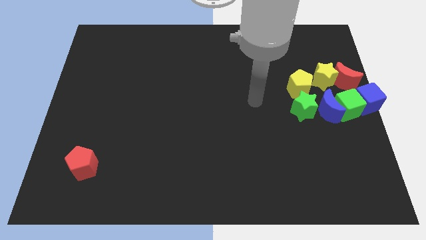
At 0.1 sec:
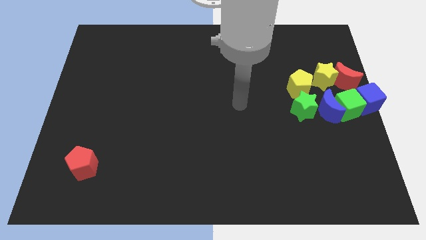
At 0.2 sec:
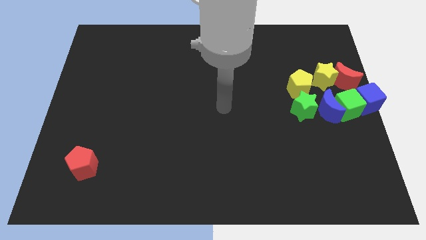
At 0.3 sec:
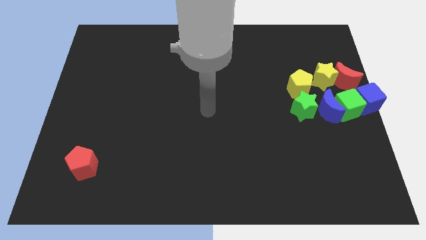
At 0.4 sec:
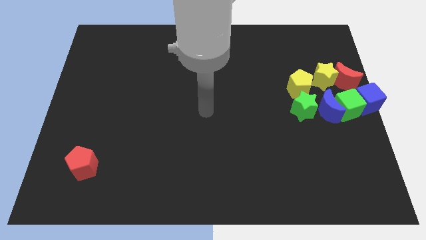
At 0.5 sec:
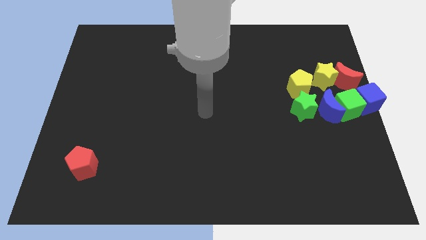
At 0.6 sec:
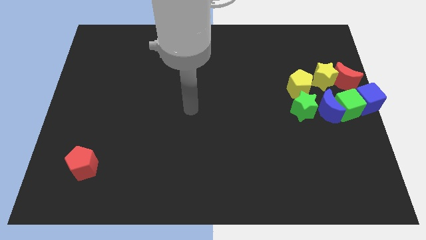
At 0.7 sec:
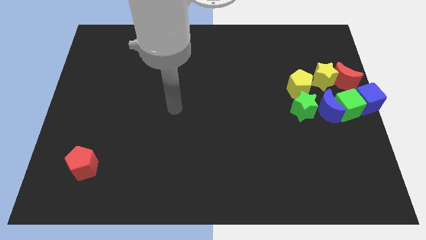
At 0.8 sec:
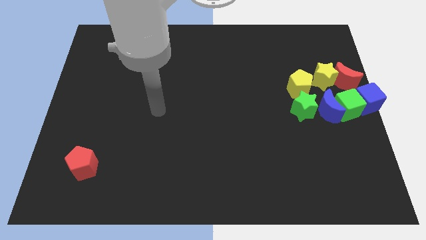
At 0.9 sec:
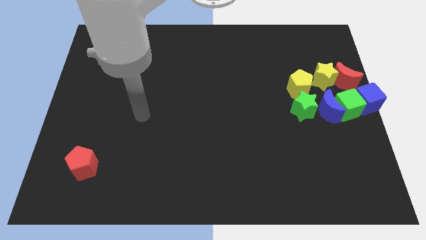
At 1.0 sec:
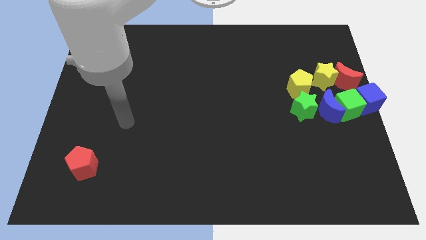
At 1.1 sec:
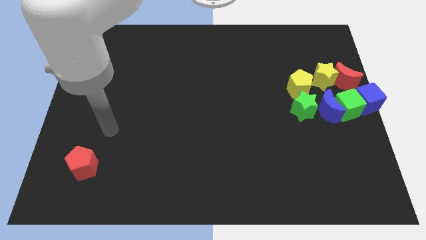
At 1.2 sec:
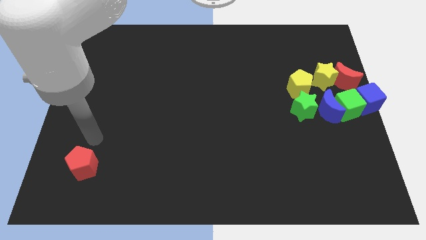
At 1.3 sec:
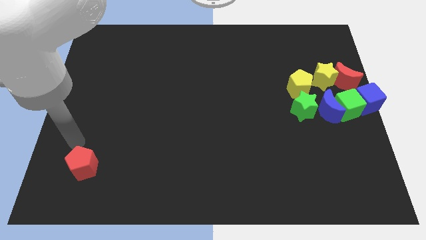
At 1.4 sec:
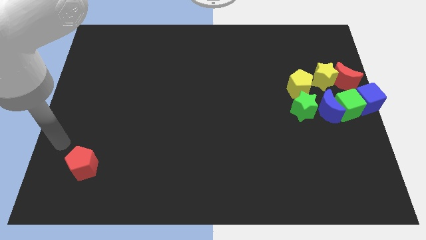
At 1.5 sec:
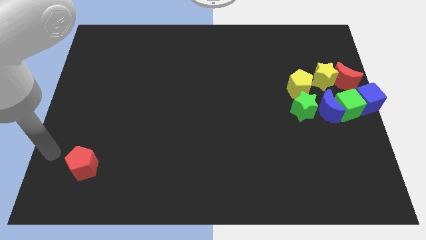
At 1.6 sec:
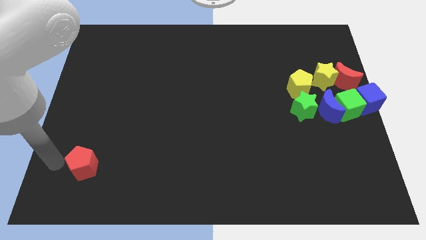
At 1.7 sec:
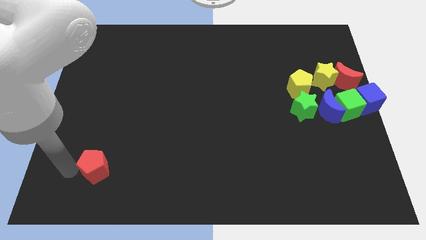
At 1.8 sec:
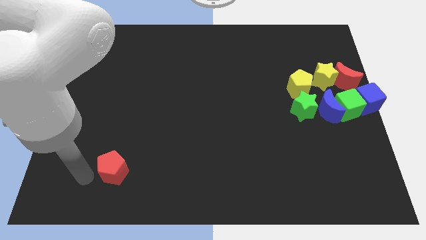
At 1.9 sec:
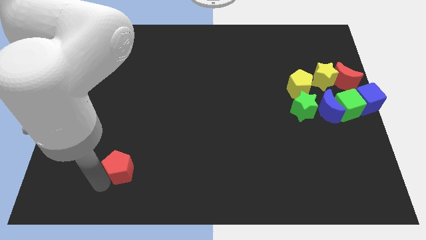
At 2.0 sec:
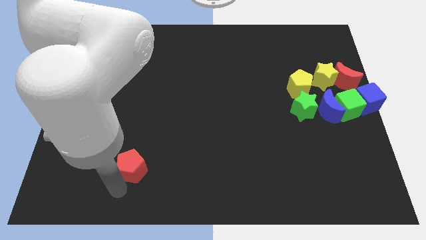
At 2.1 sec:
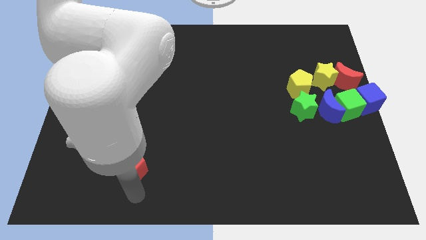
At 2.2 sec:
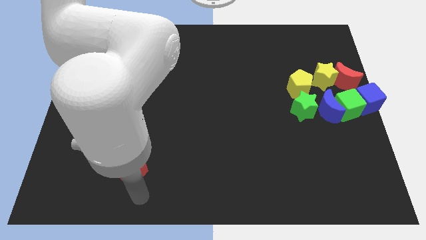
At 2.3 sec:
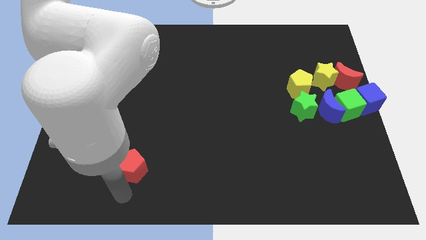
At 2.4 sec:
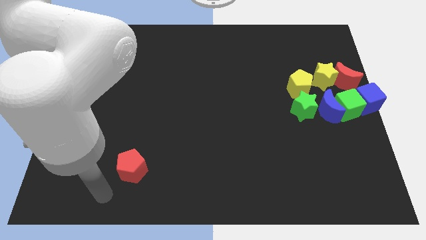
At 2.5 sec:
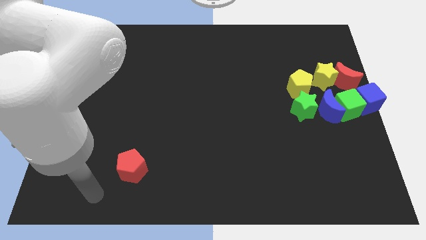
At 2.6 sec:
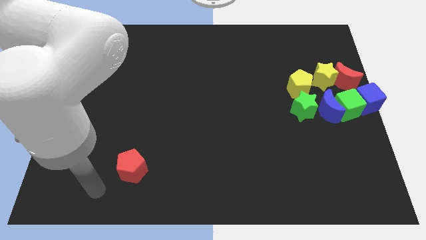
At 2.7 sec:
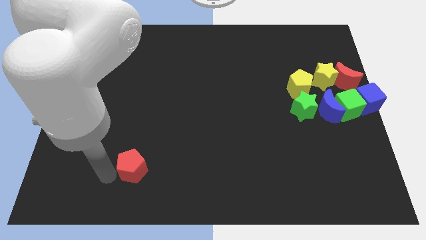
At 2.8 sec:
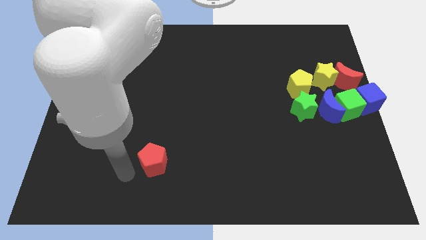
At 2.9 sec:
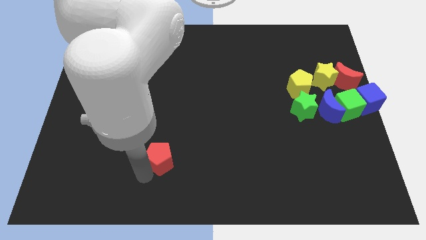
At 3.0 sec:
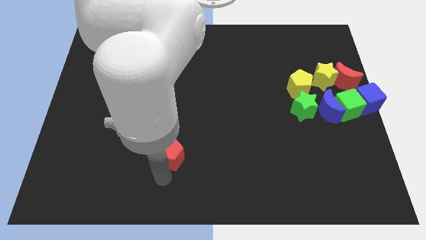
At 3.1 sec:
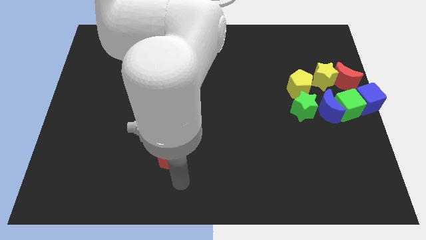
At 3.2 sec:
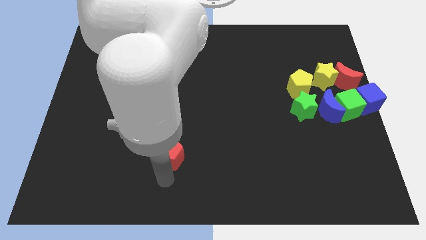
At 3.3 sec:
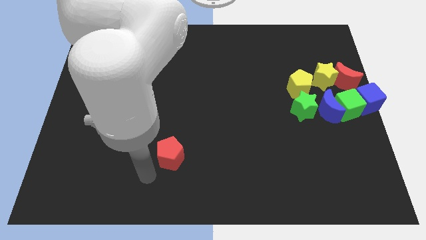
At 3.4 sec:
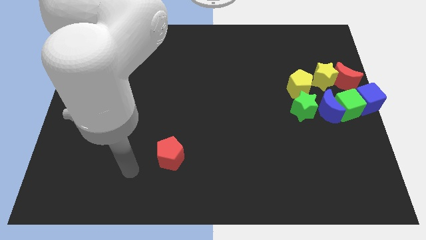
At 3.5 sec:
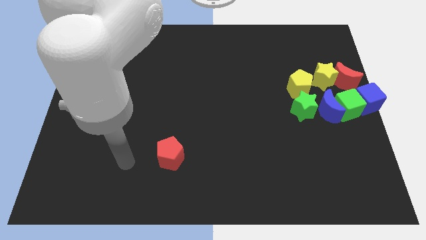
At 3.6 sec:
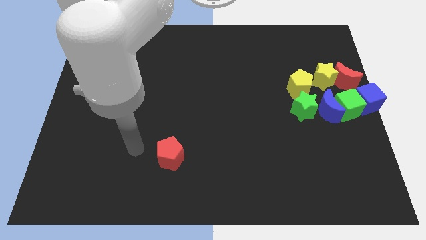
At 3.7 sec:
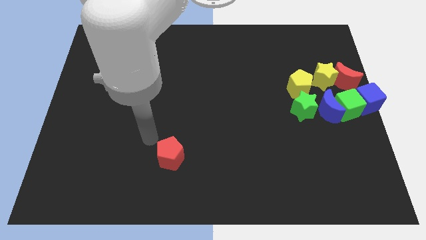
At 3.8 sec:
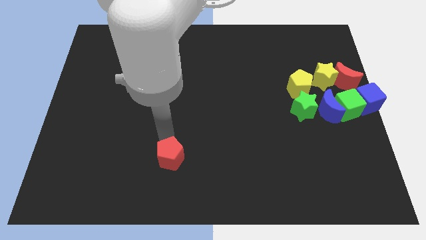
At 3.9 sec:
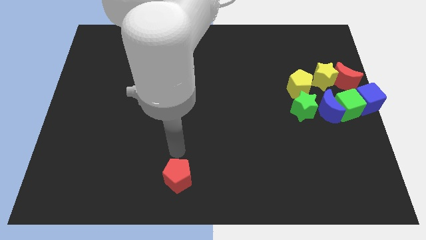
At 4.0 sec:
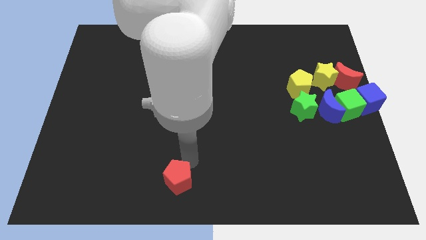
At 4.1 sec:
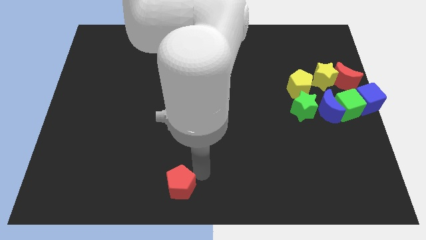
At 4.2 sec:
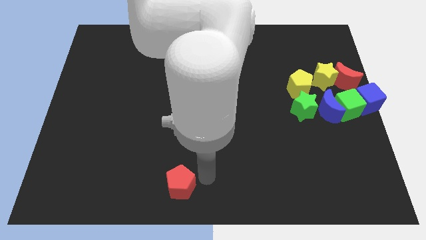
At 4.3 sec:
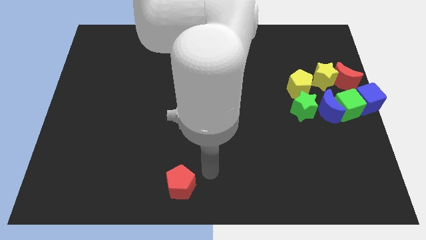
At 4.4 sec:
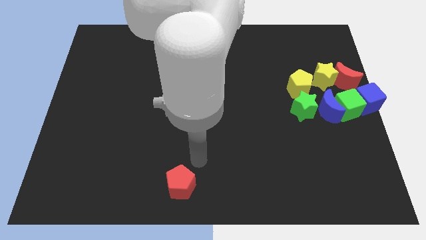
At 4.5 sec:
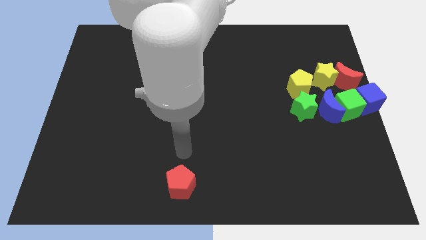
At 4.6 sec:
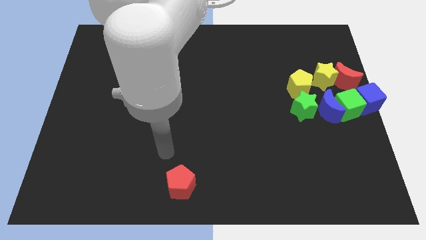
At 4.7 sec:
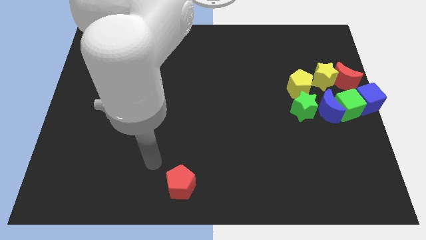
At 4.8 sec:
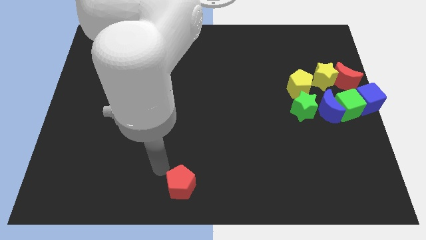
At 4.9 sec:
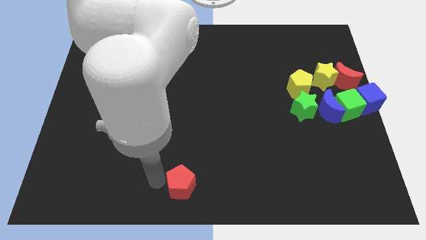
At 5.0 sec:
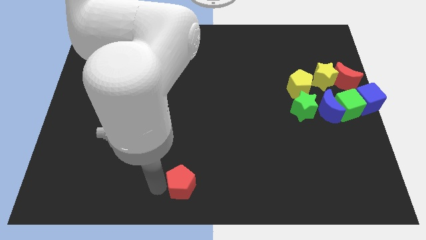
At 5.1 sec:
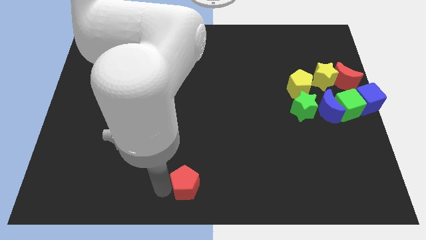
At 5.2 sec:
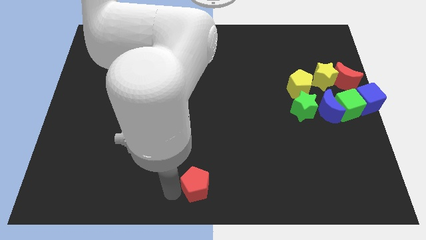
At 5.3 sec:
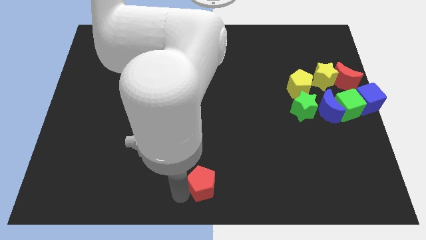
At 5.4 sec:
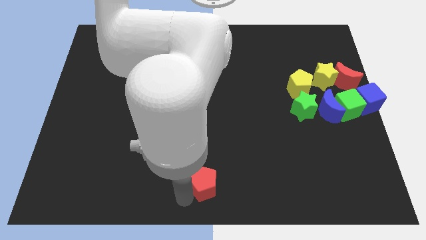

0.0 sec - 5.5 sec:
place the red pentagon diagonally bottom left to the group of blocks

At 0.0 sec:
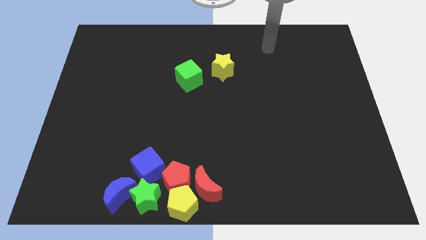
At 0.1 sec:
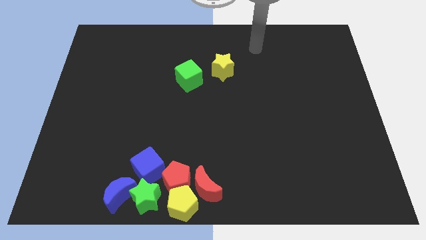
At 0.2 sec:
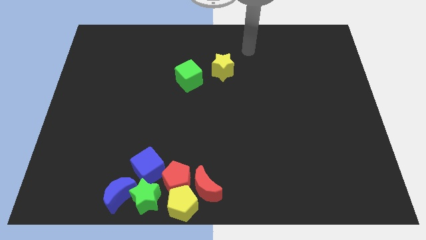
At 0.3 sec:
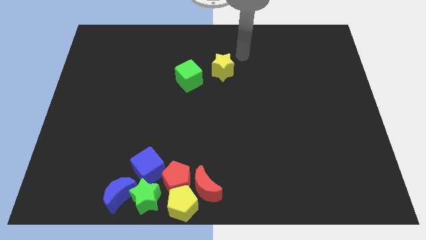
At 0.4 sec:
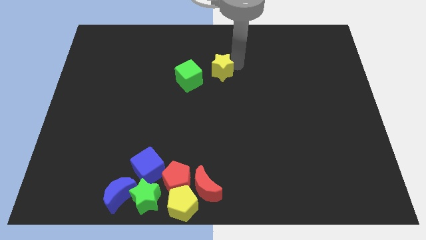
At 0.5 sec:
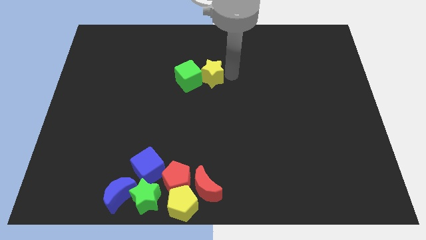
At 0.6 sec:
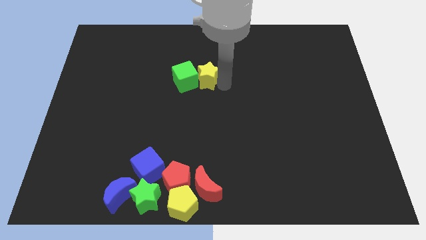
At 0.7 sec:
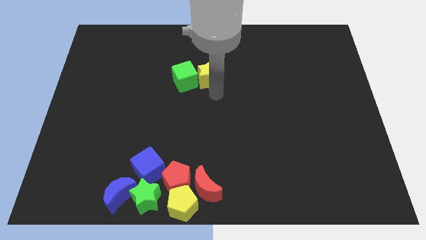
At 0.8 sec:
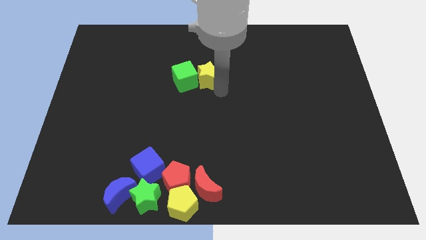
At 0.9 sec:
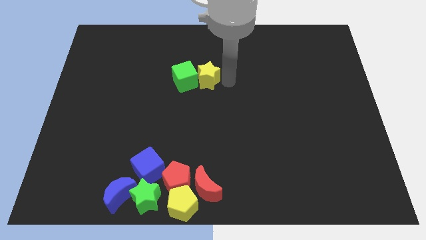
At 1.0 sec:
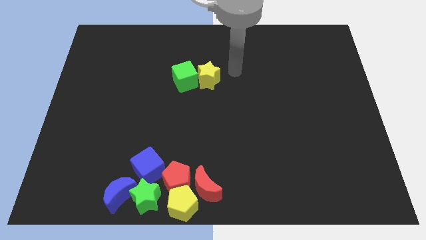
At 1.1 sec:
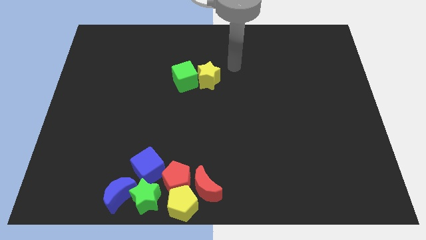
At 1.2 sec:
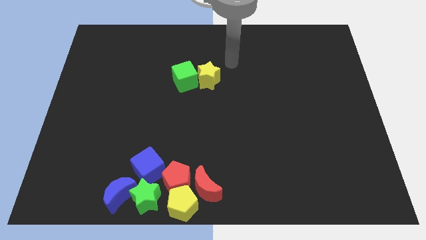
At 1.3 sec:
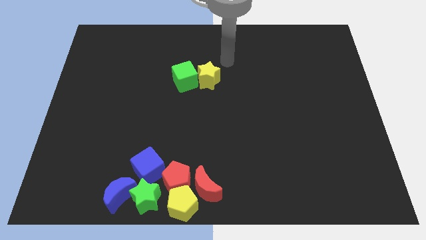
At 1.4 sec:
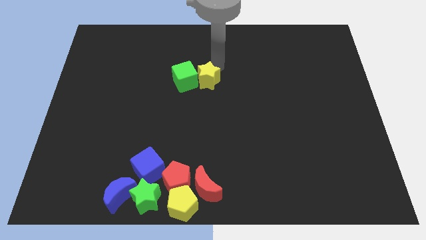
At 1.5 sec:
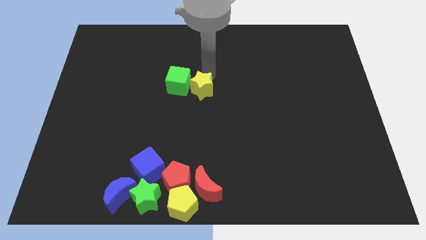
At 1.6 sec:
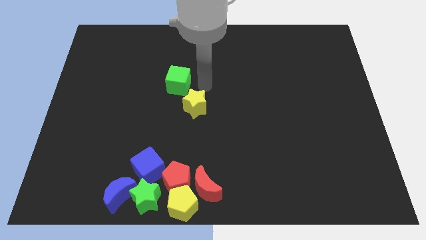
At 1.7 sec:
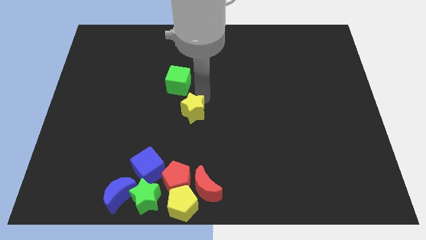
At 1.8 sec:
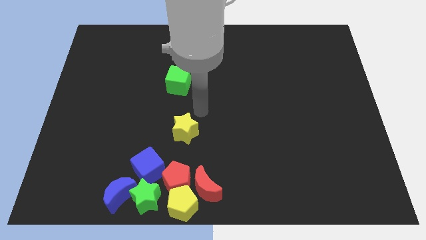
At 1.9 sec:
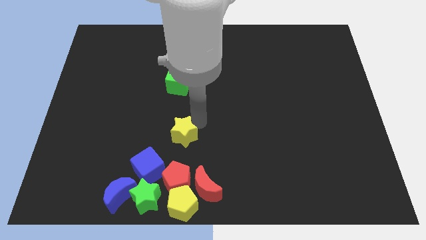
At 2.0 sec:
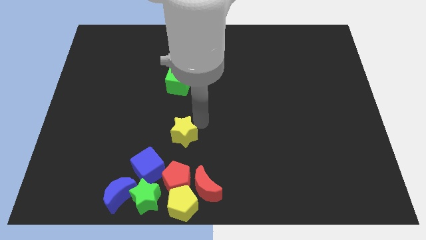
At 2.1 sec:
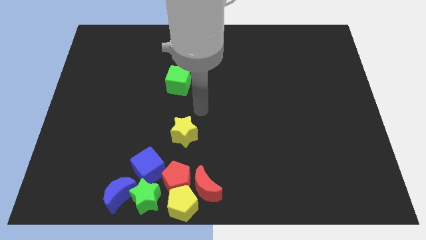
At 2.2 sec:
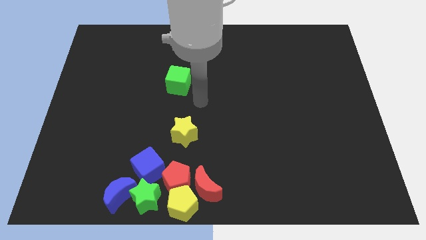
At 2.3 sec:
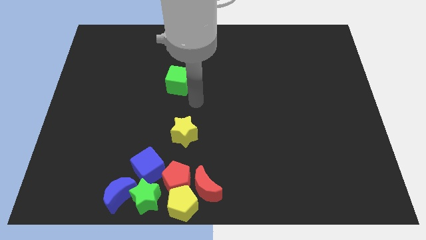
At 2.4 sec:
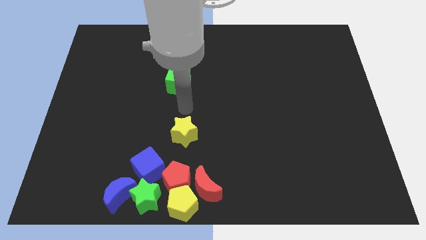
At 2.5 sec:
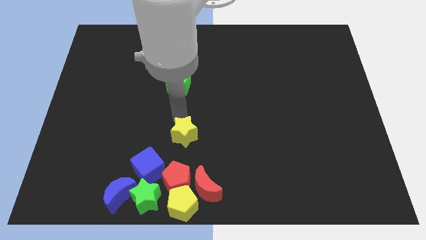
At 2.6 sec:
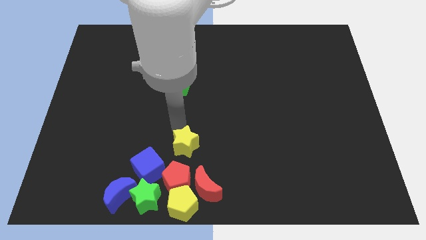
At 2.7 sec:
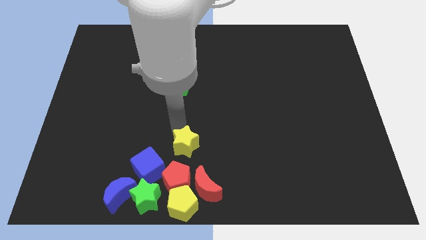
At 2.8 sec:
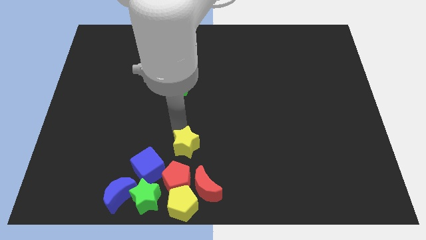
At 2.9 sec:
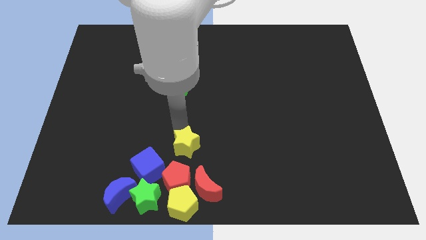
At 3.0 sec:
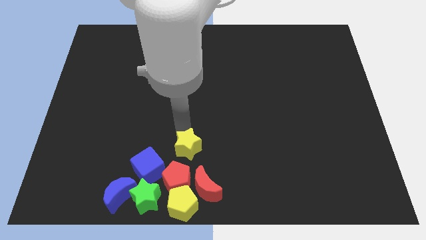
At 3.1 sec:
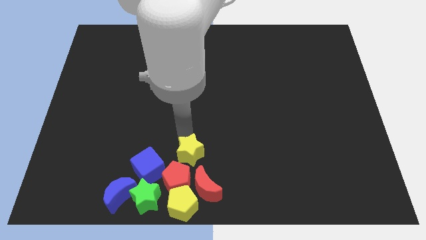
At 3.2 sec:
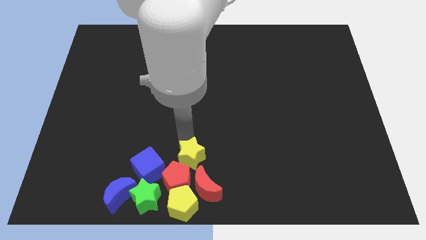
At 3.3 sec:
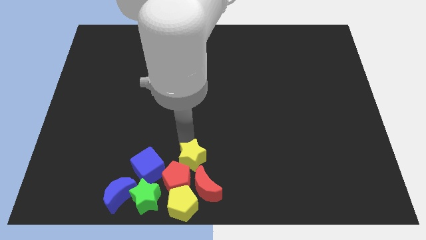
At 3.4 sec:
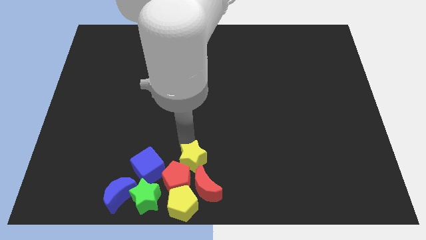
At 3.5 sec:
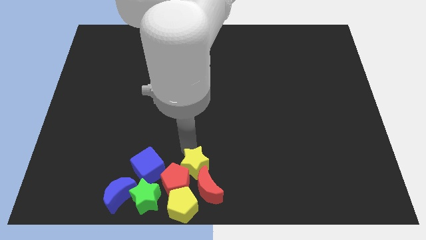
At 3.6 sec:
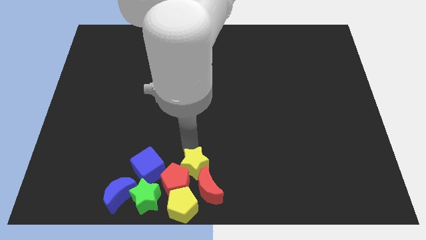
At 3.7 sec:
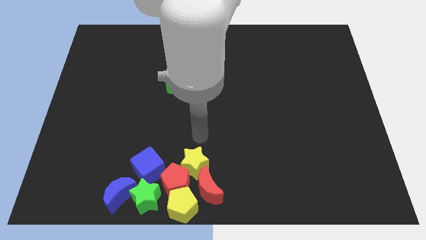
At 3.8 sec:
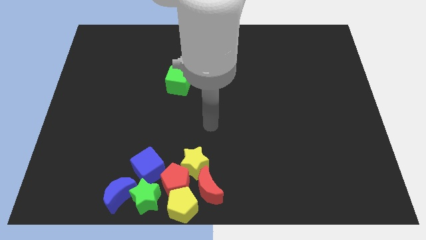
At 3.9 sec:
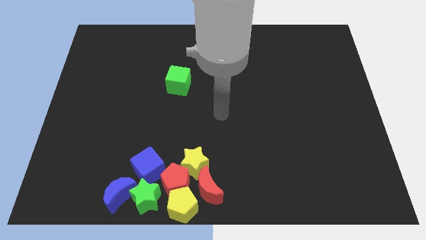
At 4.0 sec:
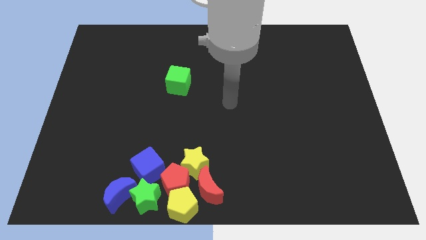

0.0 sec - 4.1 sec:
push yellow star in to red blocks
